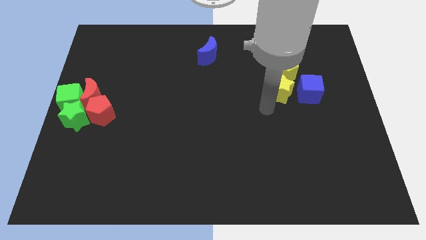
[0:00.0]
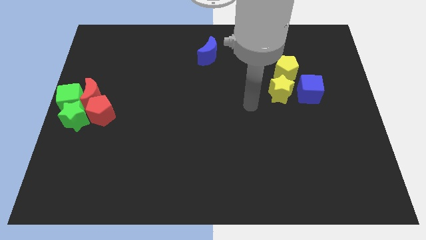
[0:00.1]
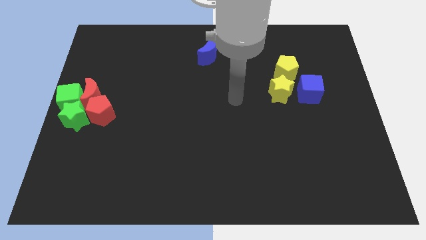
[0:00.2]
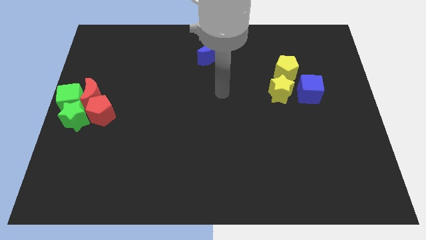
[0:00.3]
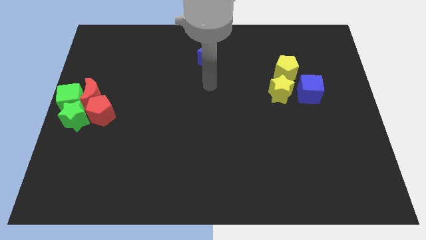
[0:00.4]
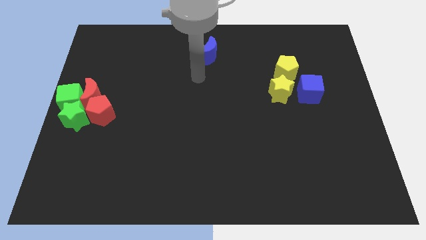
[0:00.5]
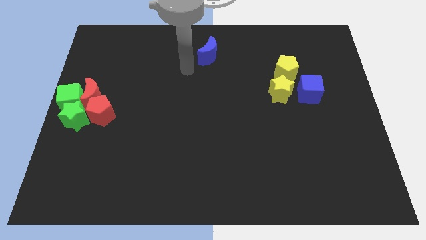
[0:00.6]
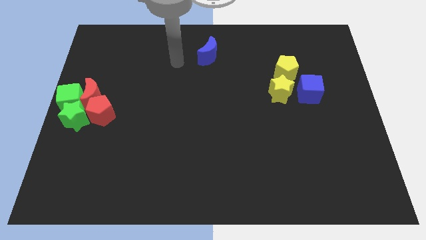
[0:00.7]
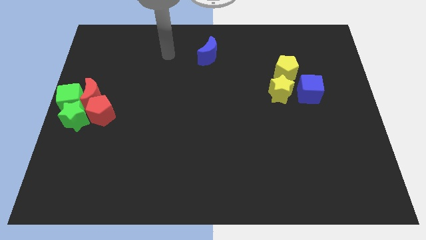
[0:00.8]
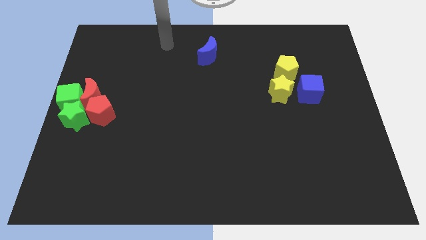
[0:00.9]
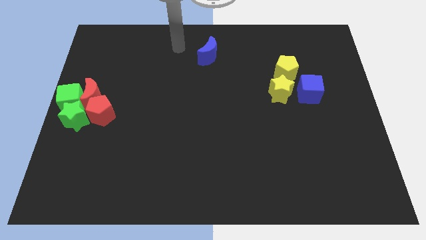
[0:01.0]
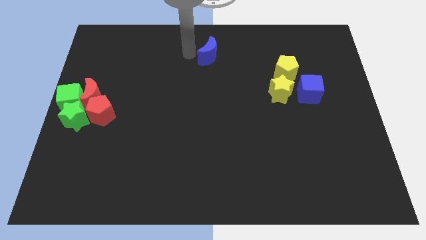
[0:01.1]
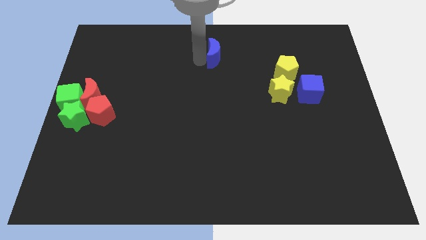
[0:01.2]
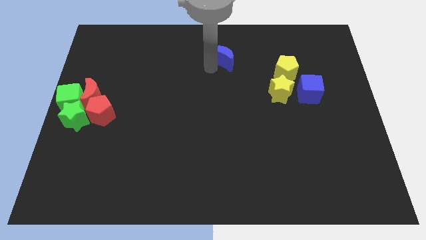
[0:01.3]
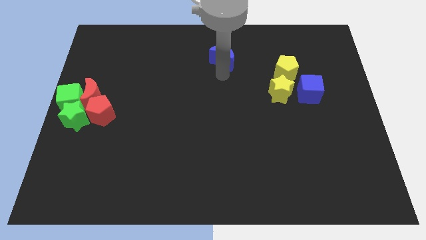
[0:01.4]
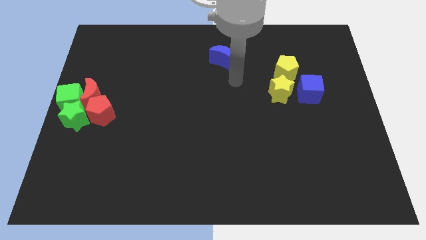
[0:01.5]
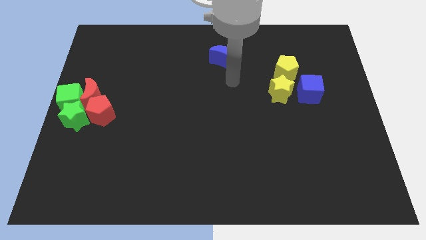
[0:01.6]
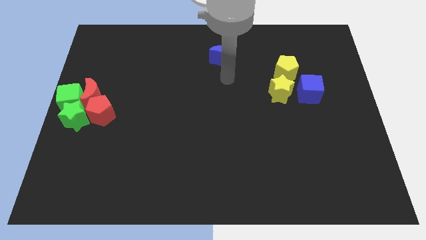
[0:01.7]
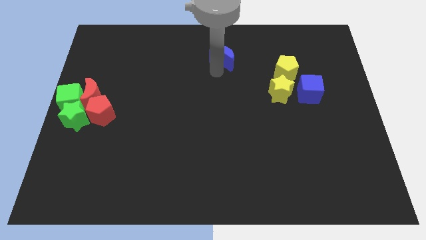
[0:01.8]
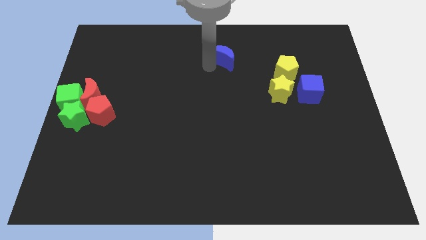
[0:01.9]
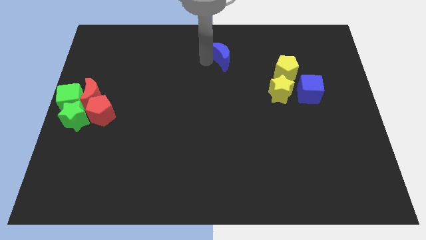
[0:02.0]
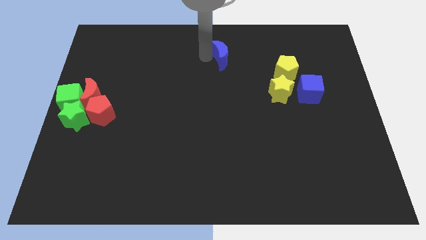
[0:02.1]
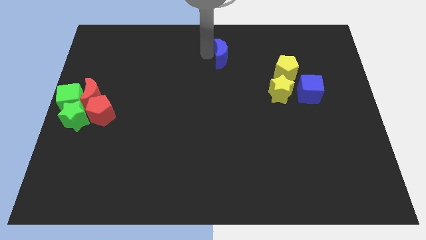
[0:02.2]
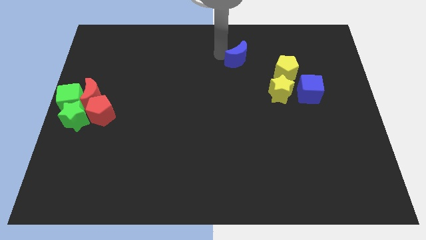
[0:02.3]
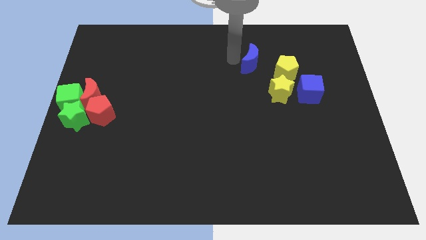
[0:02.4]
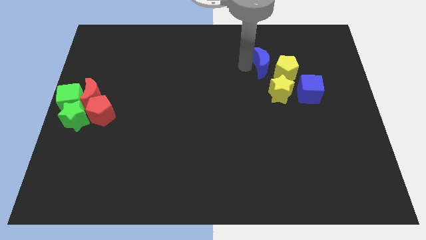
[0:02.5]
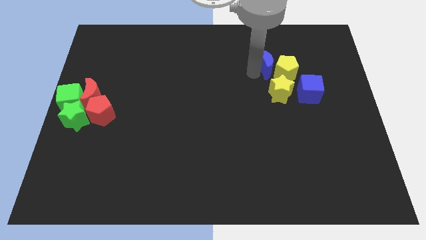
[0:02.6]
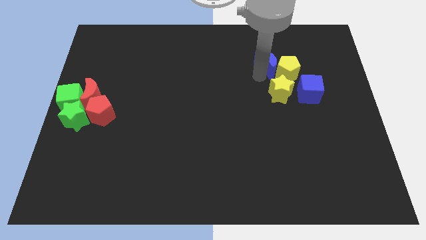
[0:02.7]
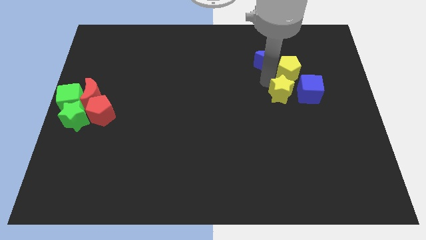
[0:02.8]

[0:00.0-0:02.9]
place the blue moon left to the yellow pentagon

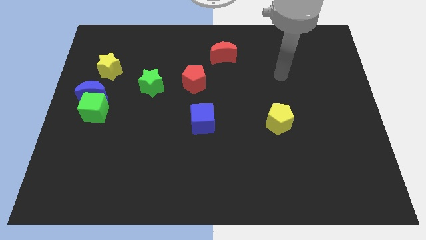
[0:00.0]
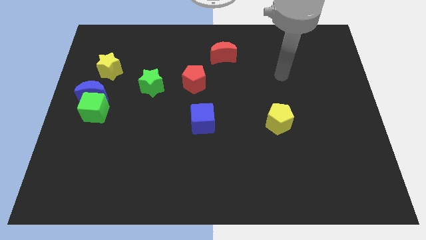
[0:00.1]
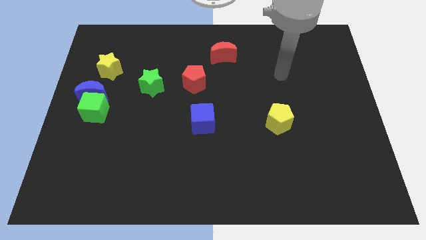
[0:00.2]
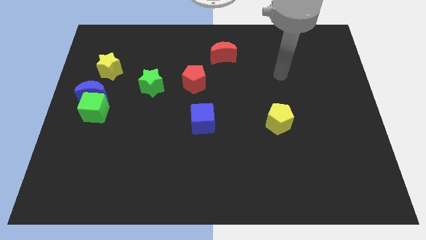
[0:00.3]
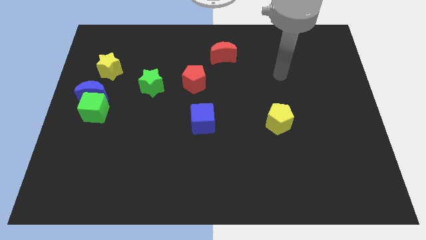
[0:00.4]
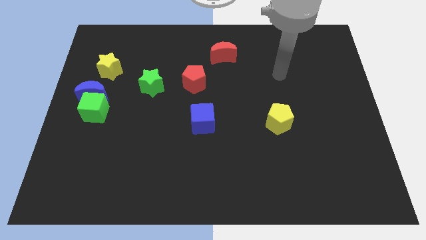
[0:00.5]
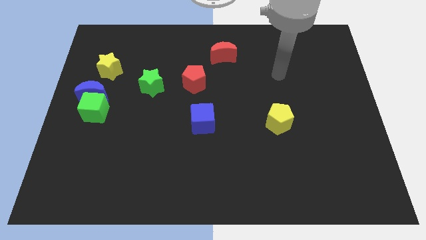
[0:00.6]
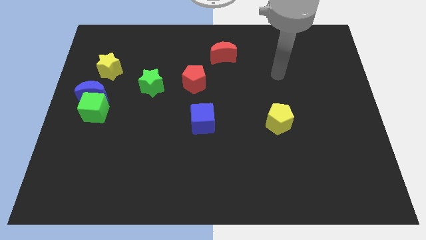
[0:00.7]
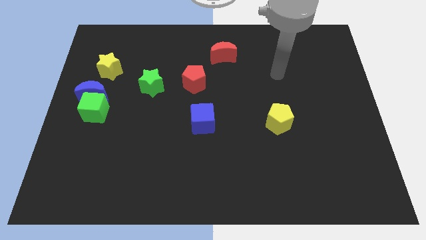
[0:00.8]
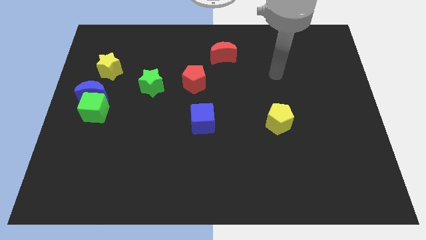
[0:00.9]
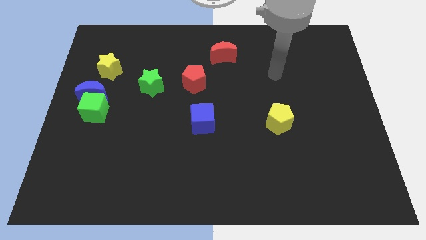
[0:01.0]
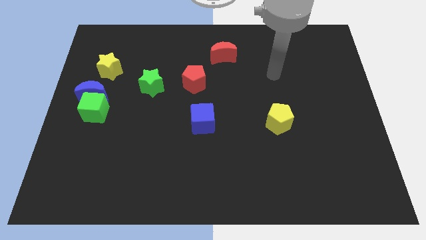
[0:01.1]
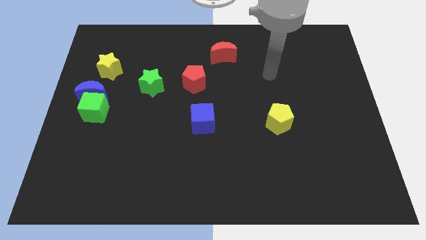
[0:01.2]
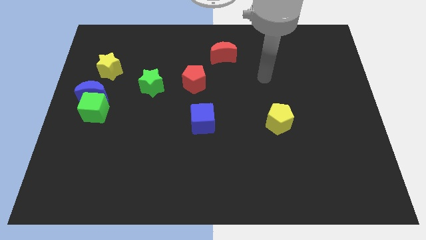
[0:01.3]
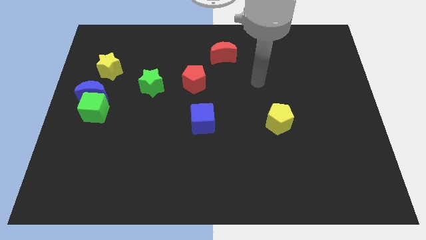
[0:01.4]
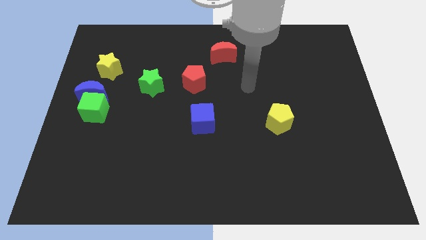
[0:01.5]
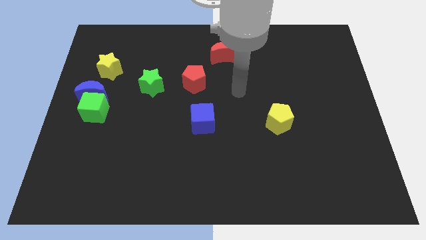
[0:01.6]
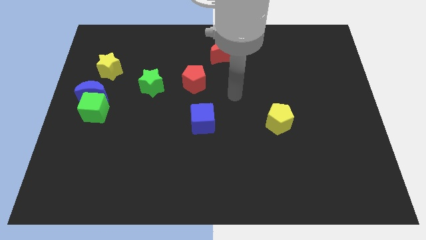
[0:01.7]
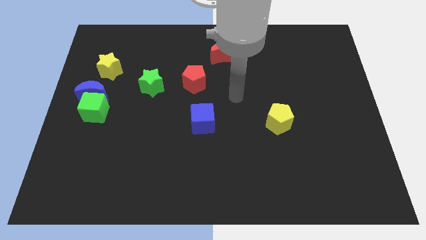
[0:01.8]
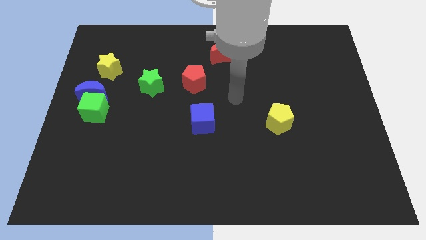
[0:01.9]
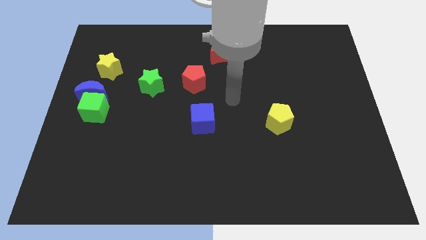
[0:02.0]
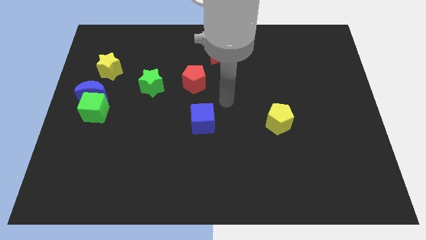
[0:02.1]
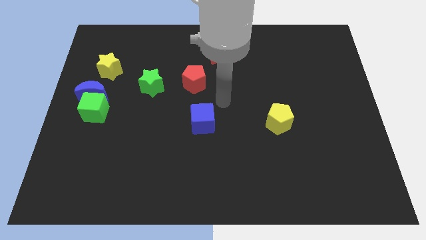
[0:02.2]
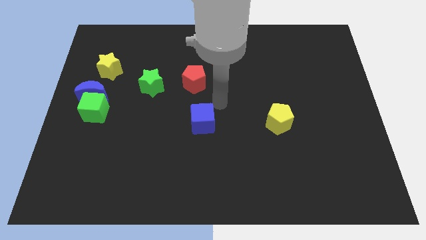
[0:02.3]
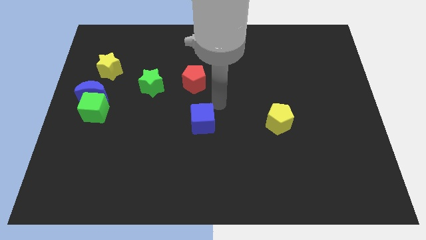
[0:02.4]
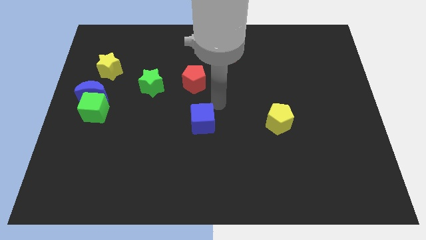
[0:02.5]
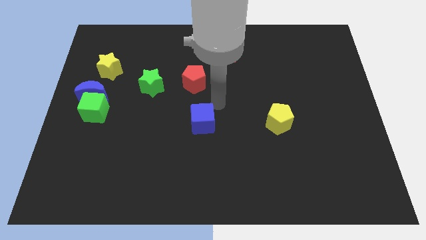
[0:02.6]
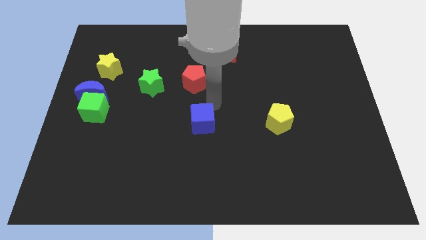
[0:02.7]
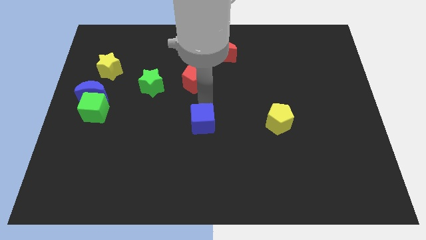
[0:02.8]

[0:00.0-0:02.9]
move your arm to the top side of the blue cube

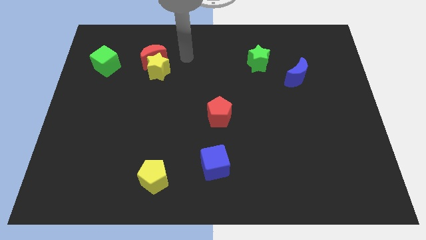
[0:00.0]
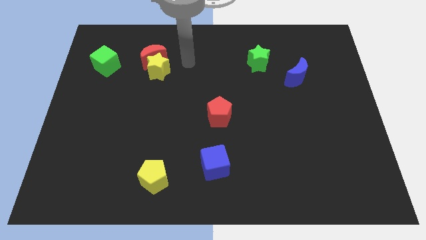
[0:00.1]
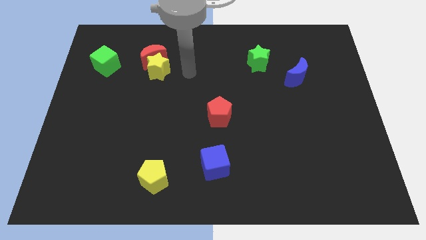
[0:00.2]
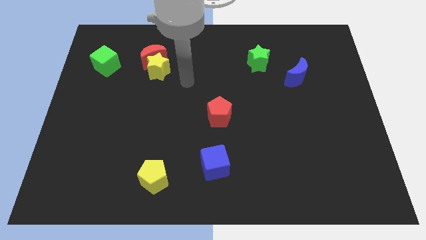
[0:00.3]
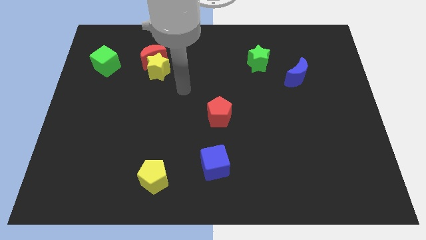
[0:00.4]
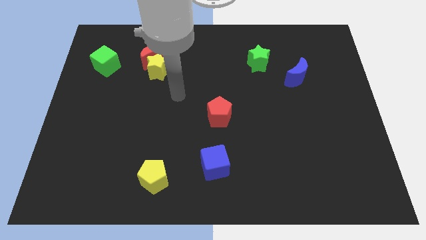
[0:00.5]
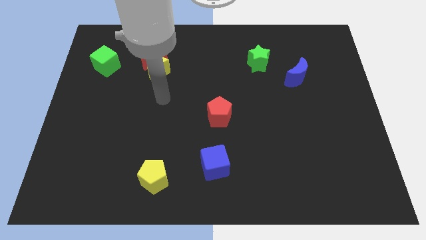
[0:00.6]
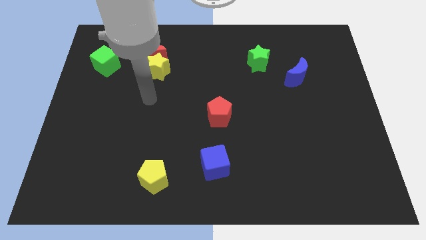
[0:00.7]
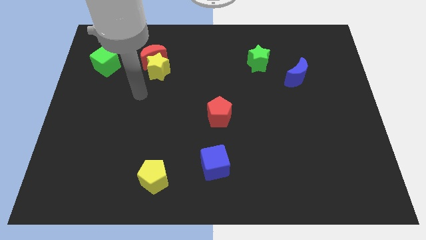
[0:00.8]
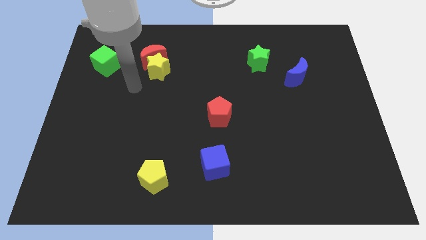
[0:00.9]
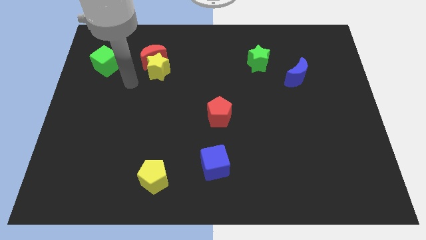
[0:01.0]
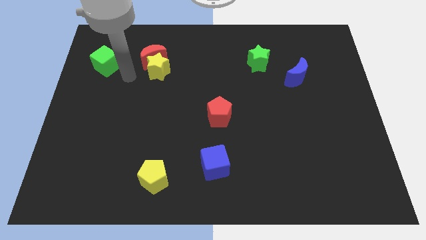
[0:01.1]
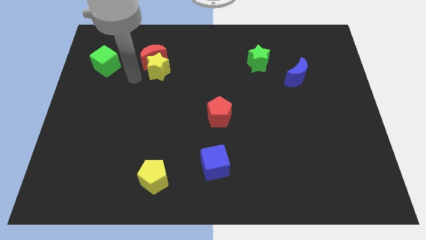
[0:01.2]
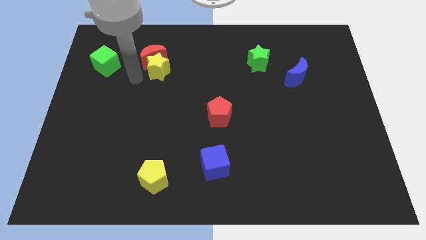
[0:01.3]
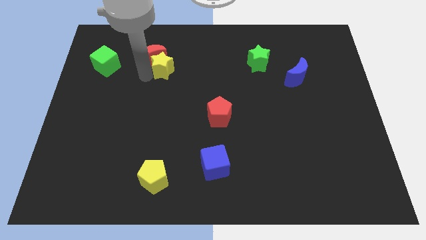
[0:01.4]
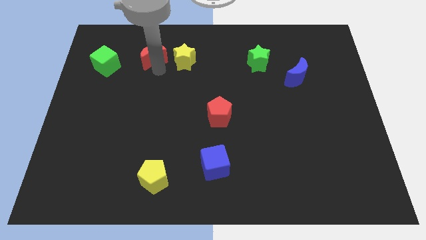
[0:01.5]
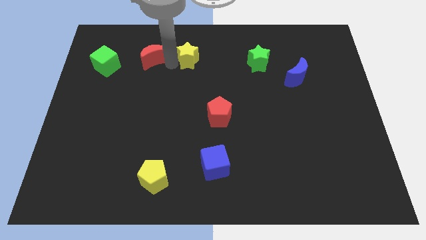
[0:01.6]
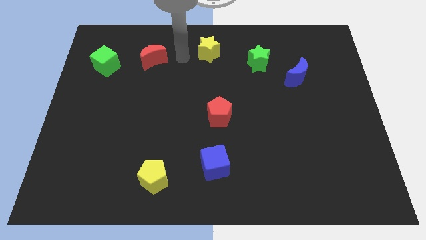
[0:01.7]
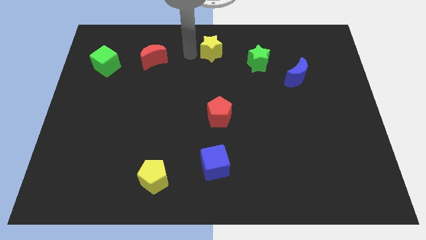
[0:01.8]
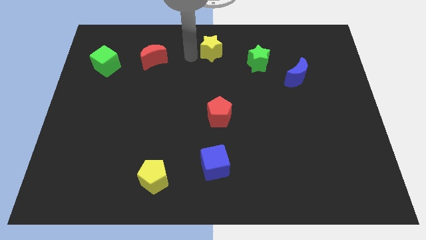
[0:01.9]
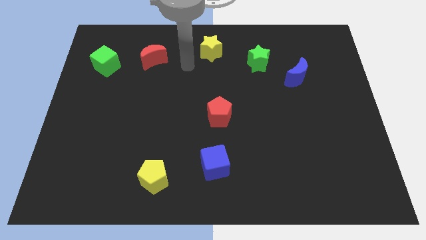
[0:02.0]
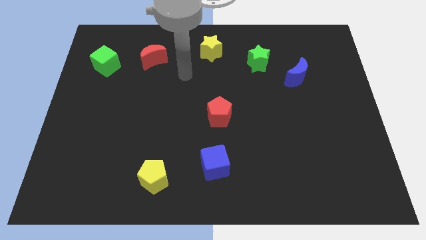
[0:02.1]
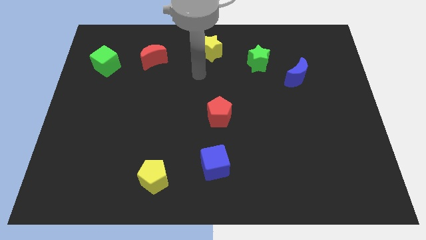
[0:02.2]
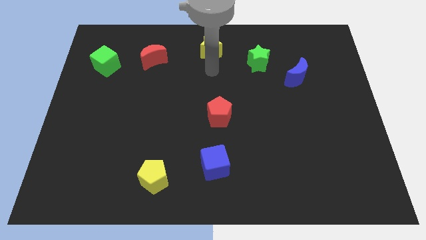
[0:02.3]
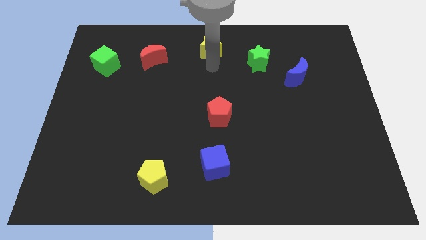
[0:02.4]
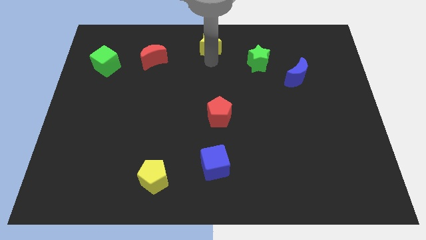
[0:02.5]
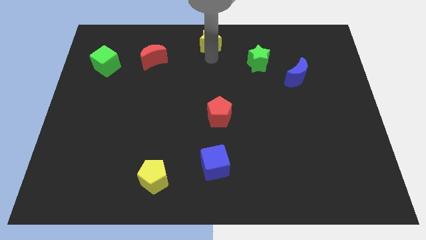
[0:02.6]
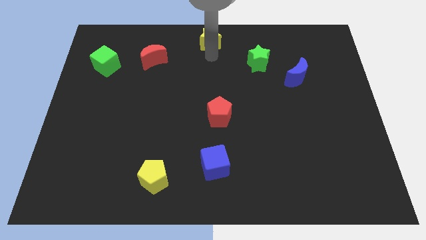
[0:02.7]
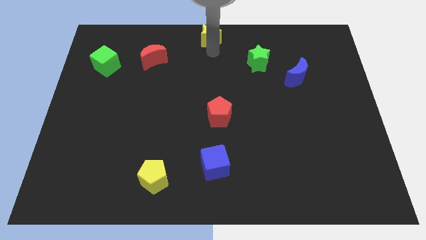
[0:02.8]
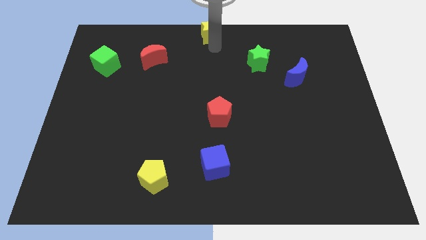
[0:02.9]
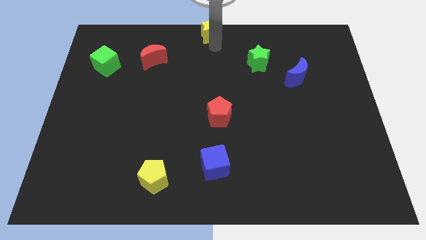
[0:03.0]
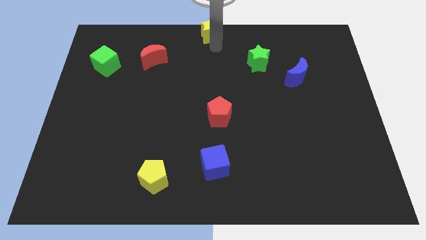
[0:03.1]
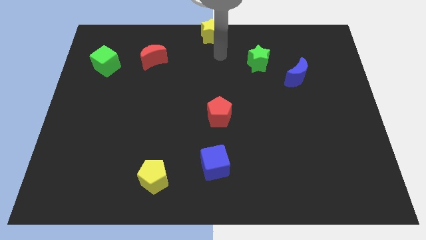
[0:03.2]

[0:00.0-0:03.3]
place yellow star to the top center of the board
